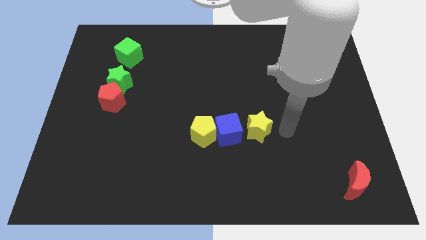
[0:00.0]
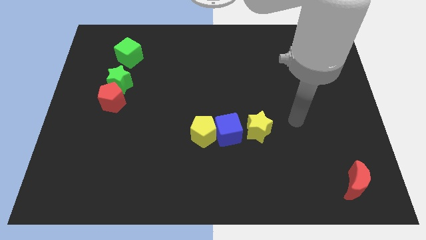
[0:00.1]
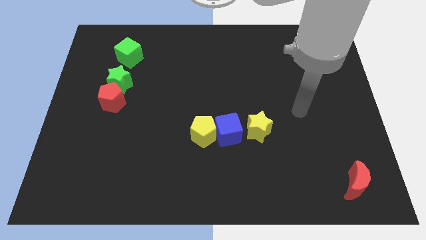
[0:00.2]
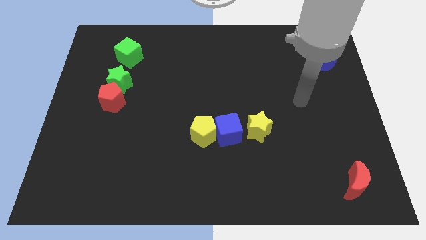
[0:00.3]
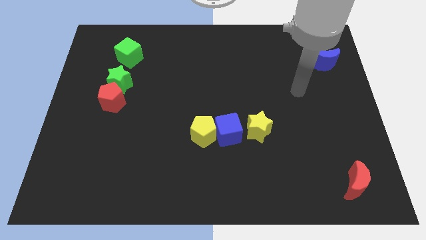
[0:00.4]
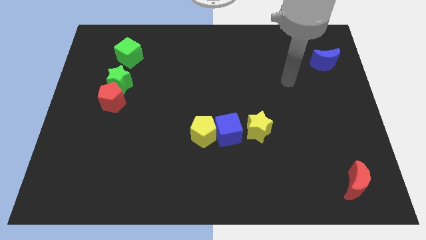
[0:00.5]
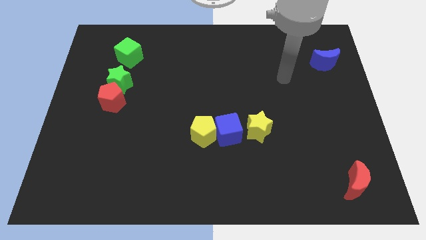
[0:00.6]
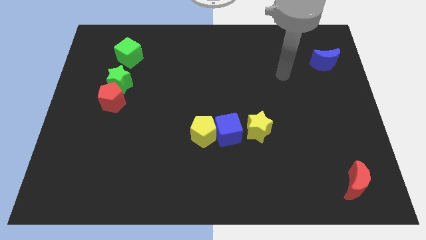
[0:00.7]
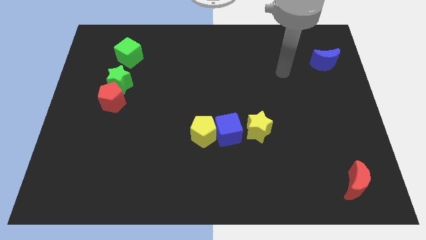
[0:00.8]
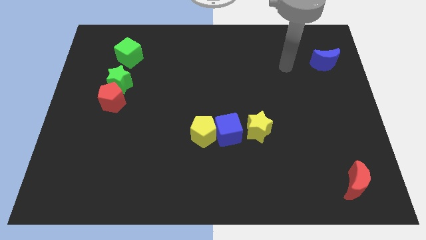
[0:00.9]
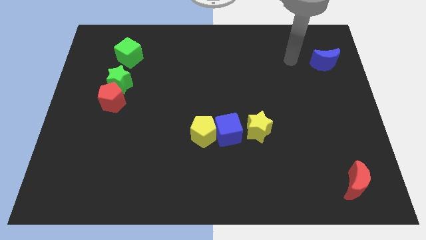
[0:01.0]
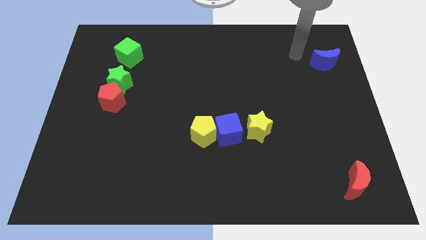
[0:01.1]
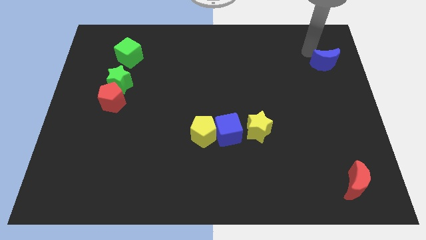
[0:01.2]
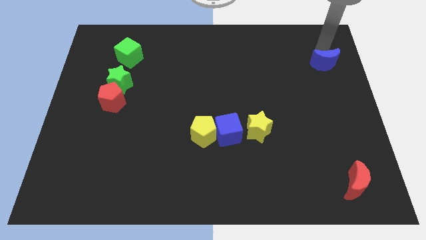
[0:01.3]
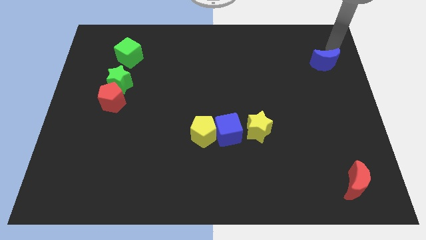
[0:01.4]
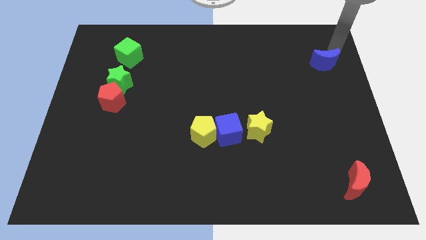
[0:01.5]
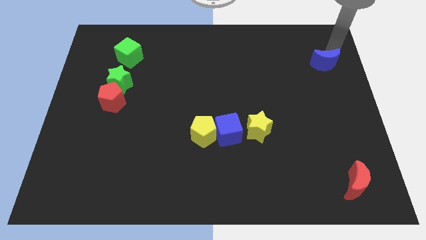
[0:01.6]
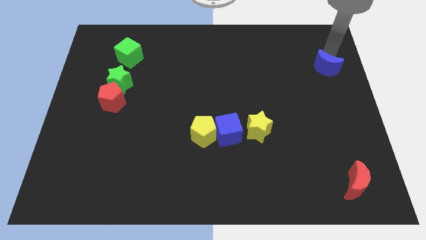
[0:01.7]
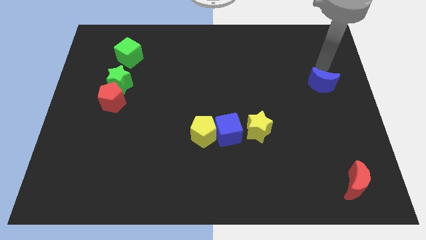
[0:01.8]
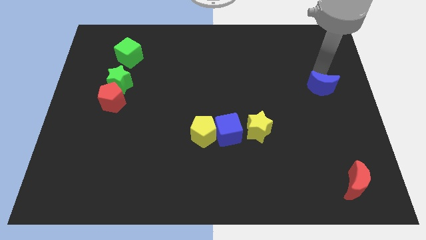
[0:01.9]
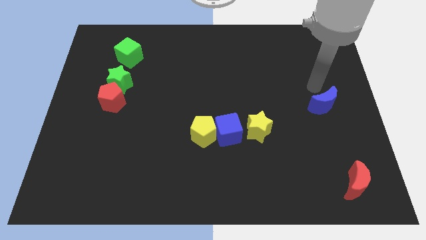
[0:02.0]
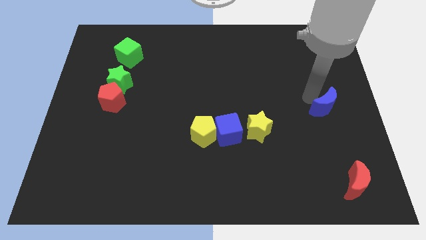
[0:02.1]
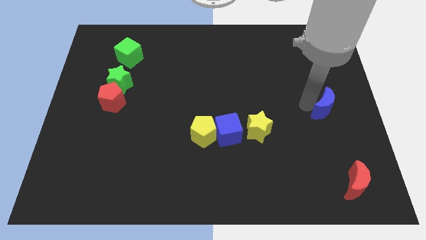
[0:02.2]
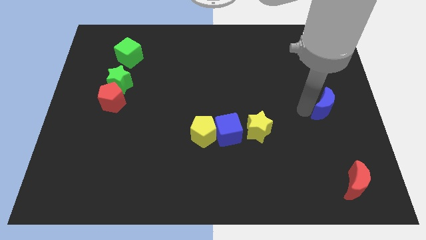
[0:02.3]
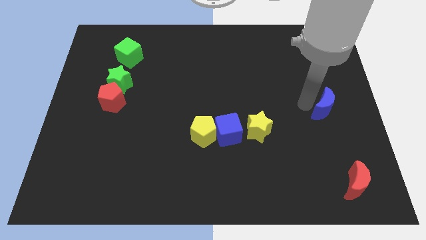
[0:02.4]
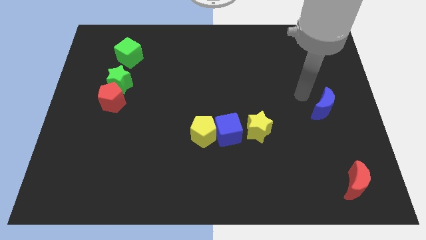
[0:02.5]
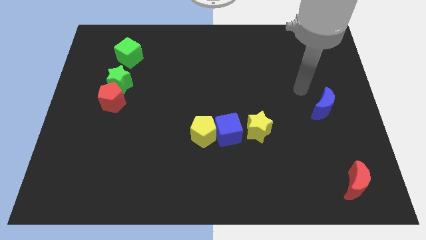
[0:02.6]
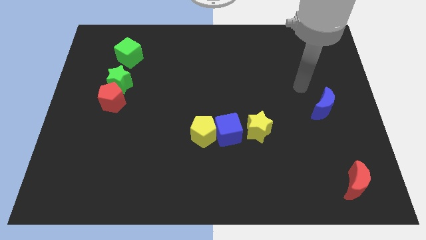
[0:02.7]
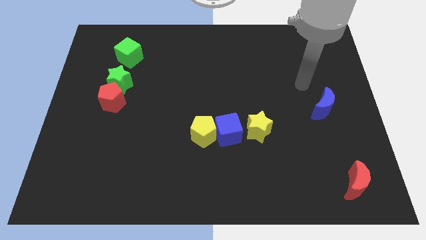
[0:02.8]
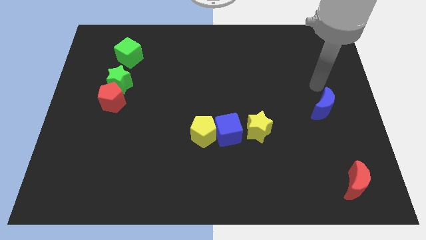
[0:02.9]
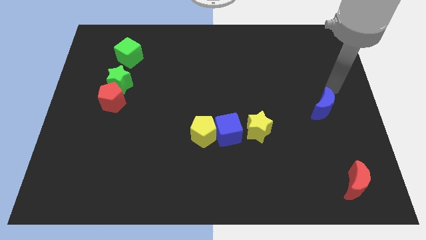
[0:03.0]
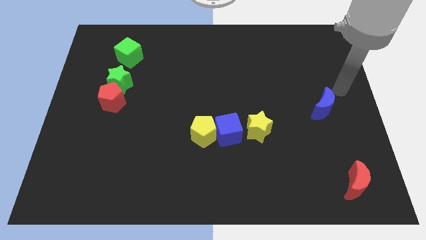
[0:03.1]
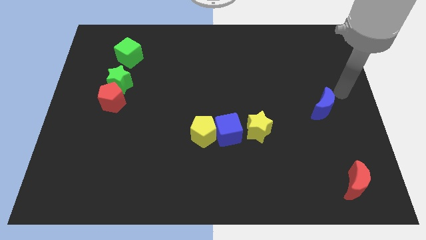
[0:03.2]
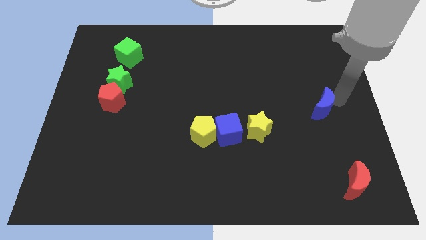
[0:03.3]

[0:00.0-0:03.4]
push the blue crescent on center right of the board

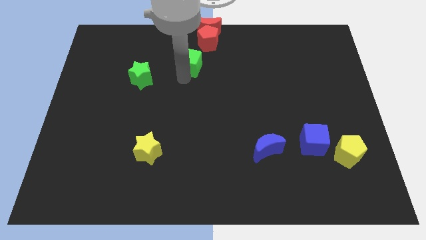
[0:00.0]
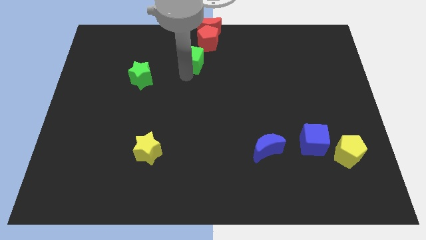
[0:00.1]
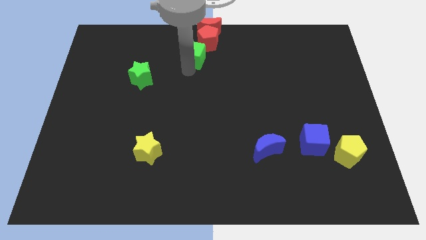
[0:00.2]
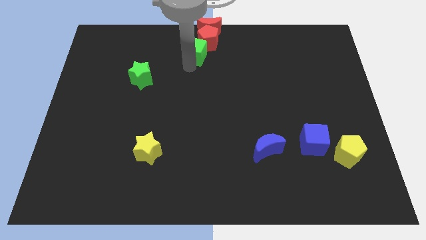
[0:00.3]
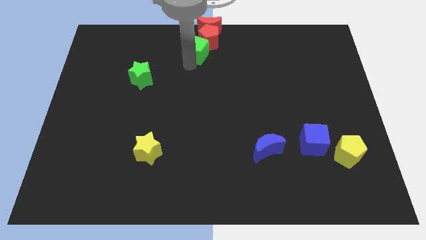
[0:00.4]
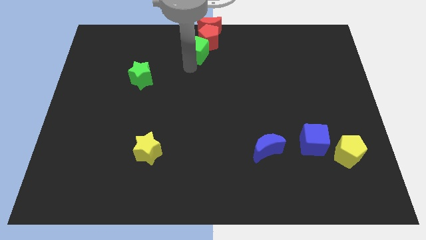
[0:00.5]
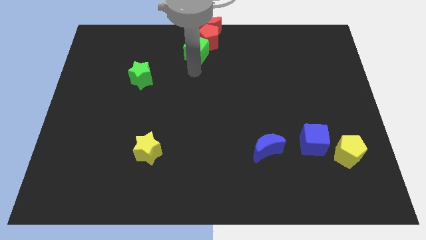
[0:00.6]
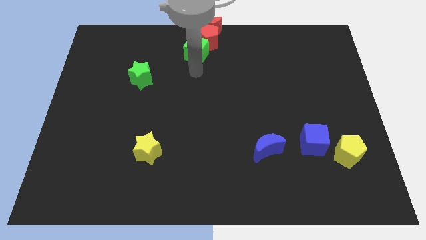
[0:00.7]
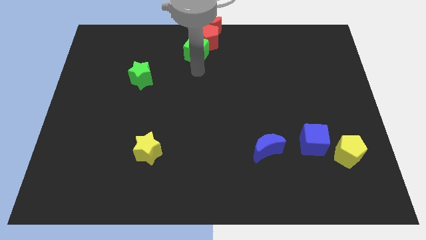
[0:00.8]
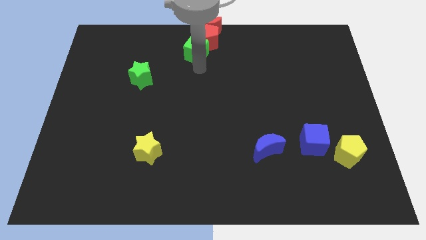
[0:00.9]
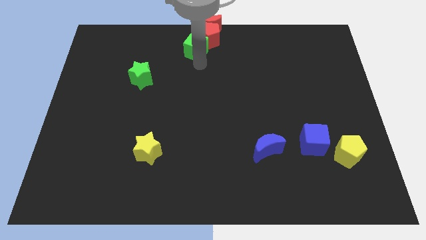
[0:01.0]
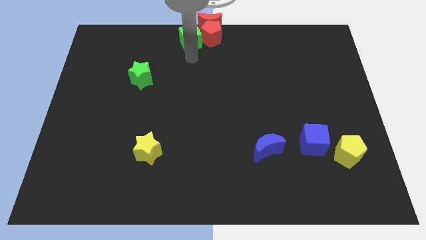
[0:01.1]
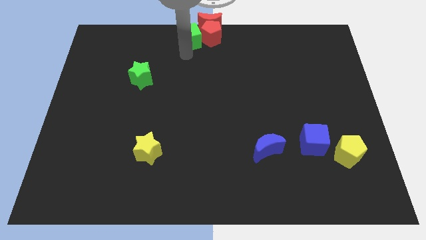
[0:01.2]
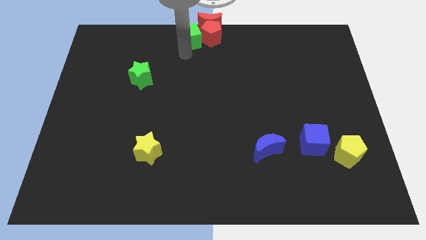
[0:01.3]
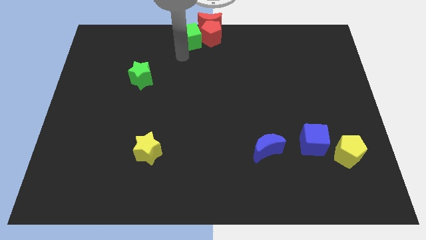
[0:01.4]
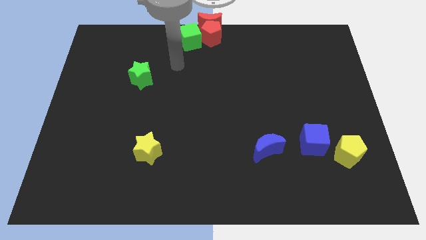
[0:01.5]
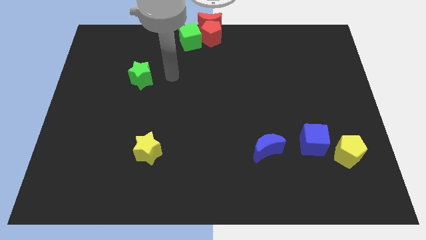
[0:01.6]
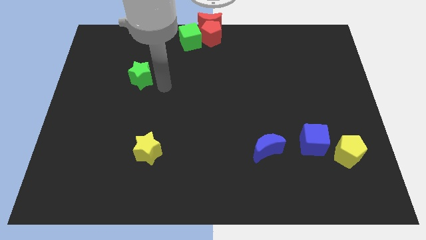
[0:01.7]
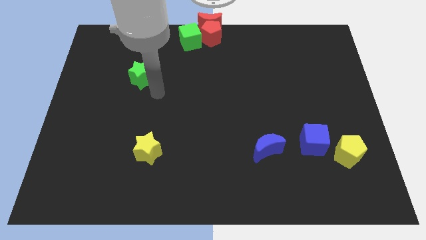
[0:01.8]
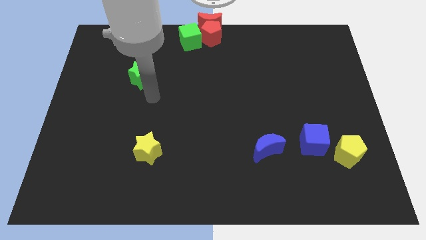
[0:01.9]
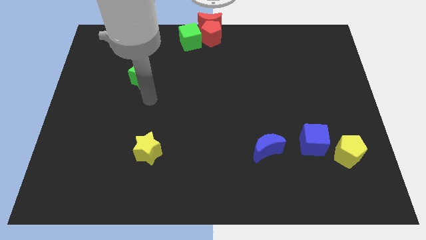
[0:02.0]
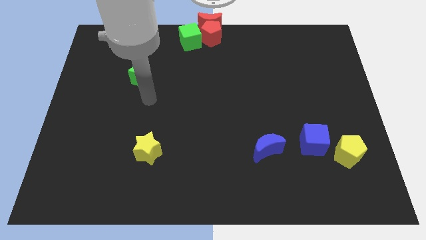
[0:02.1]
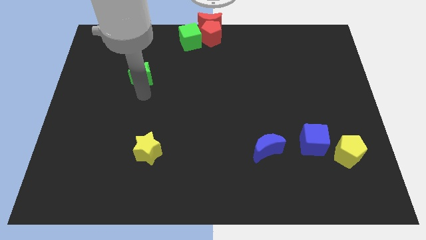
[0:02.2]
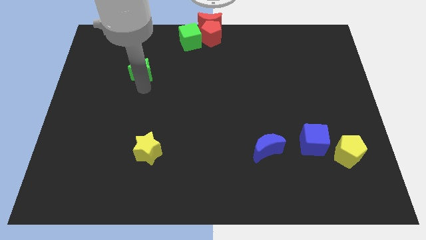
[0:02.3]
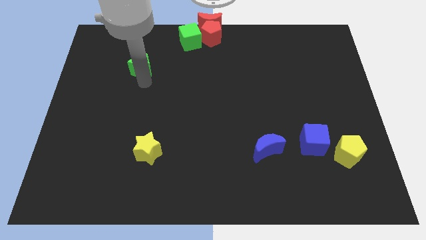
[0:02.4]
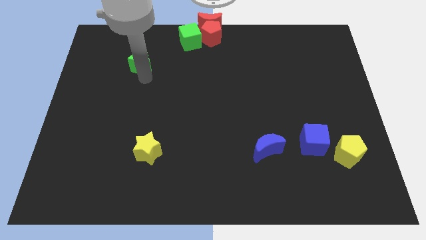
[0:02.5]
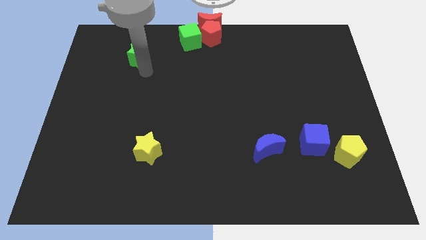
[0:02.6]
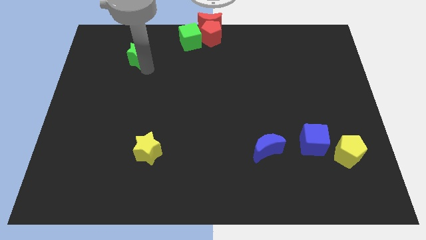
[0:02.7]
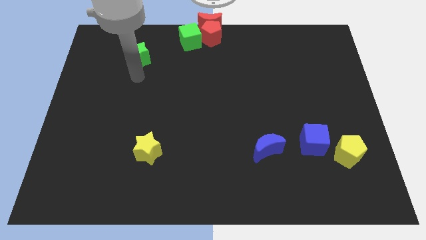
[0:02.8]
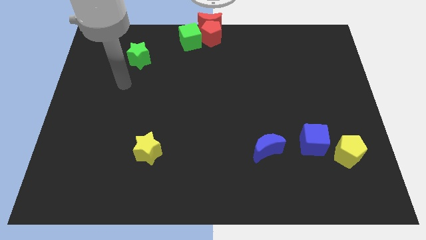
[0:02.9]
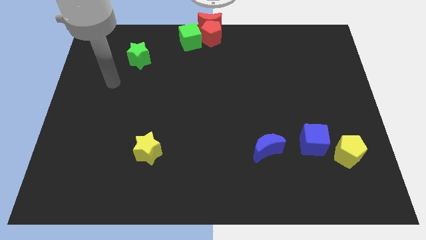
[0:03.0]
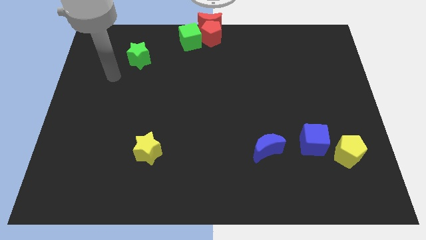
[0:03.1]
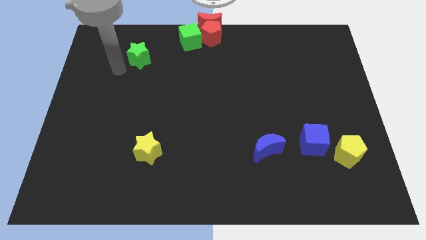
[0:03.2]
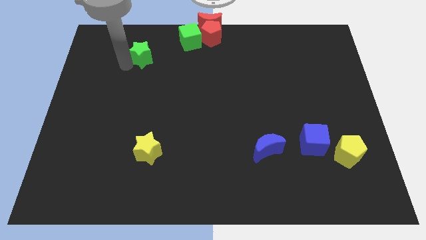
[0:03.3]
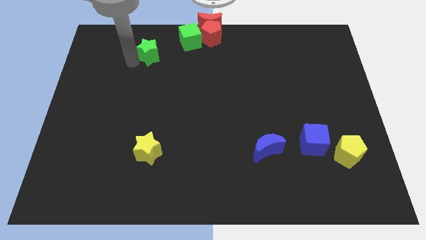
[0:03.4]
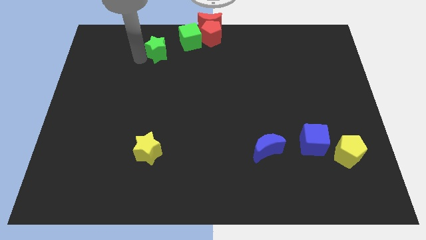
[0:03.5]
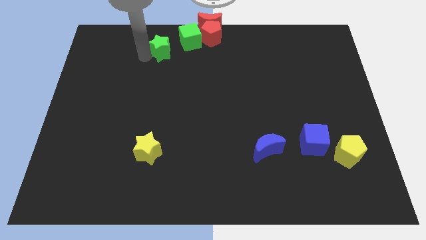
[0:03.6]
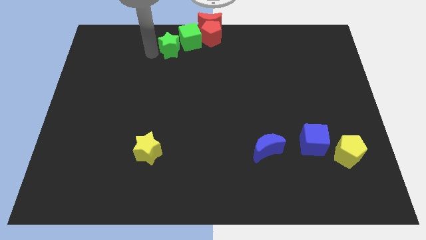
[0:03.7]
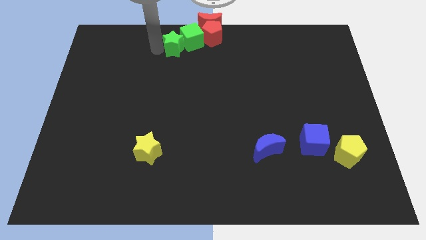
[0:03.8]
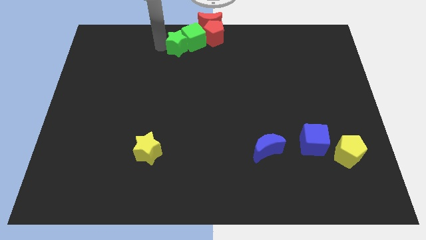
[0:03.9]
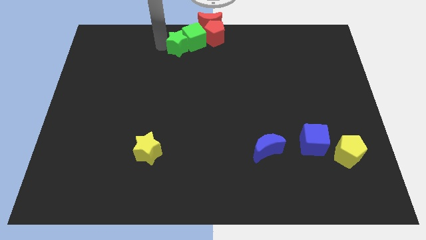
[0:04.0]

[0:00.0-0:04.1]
push the green blocks into the red blocks at the top center of the board

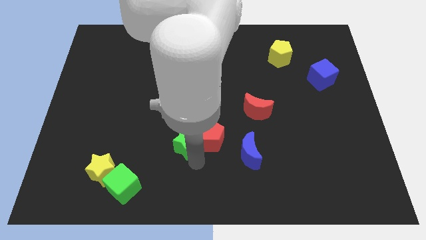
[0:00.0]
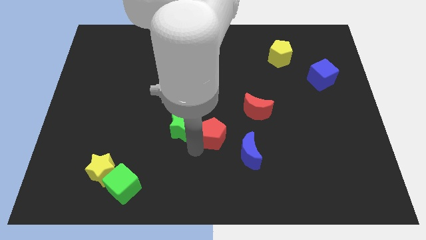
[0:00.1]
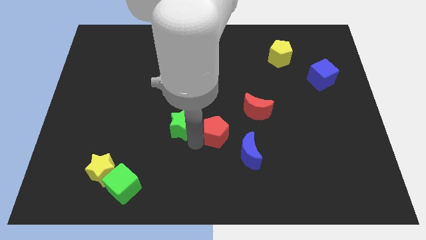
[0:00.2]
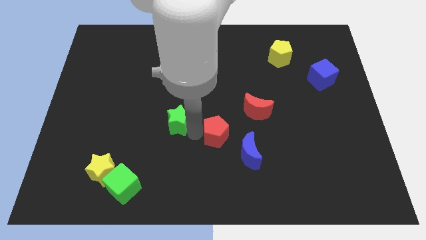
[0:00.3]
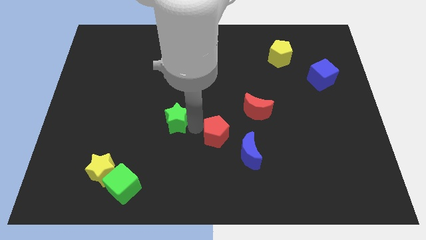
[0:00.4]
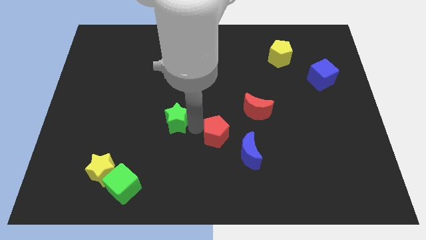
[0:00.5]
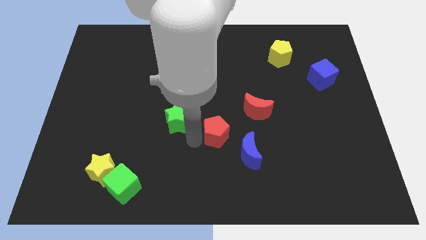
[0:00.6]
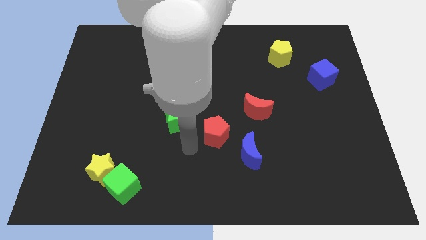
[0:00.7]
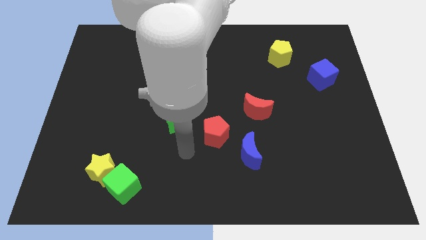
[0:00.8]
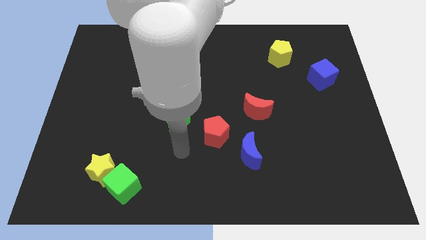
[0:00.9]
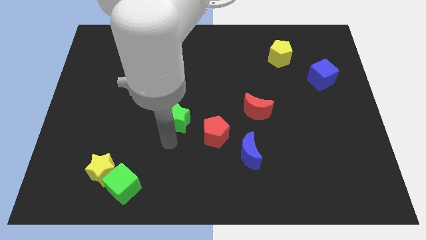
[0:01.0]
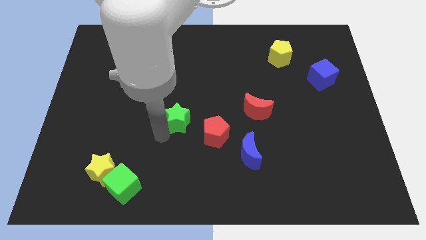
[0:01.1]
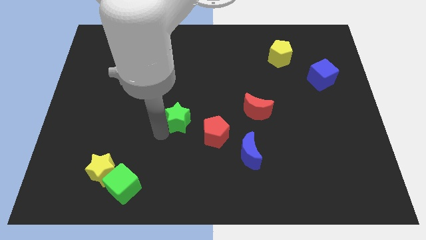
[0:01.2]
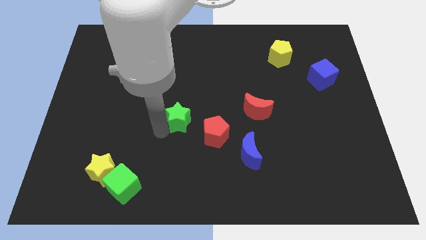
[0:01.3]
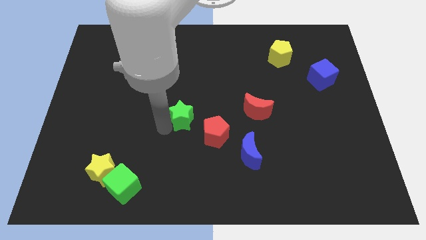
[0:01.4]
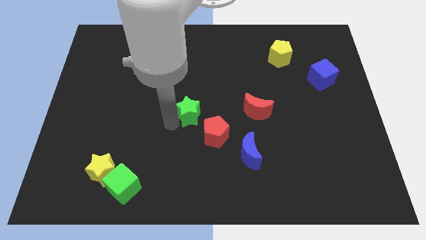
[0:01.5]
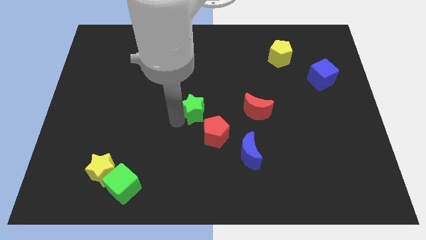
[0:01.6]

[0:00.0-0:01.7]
push the green star towards the center of the board
